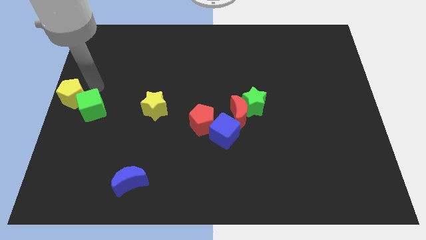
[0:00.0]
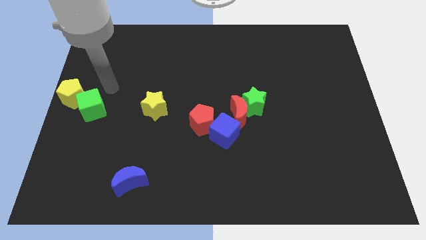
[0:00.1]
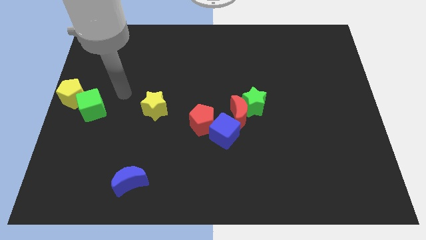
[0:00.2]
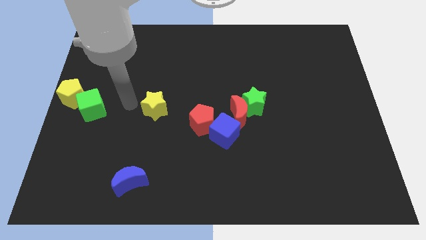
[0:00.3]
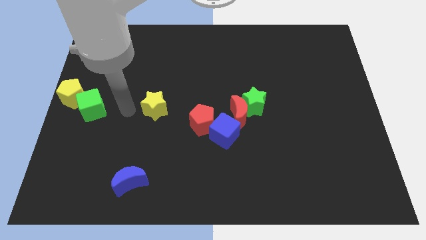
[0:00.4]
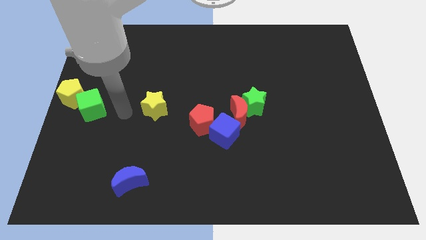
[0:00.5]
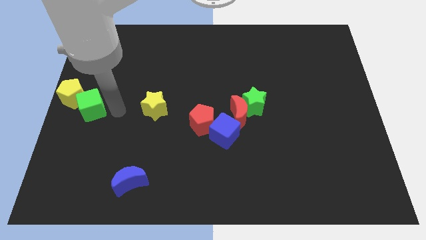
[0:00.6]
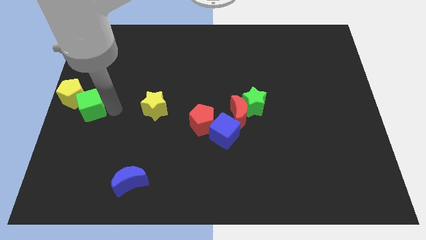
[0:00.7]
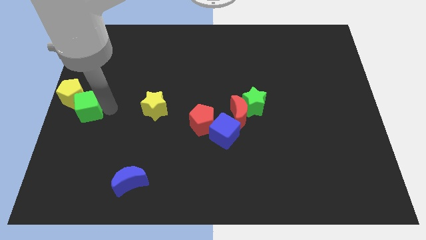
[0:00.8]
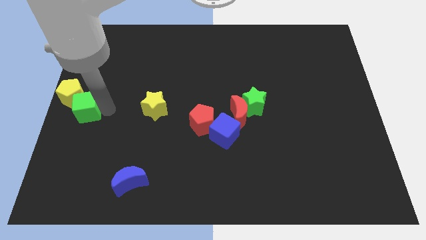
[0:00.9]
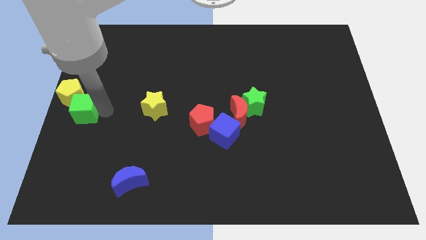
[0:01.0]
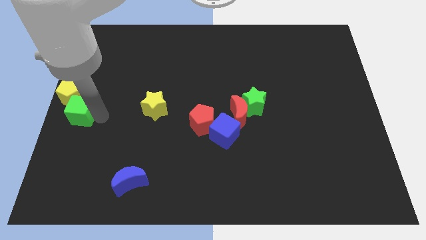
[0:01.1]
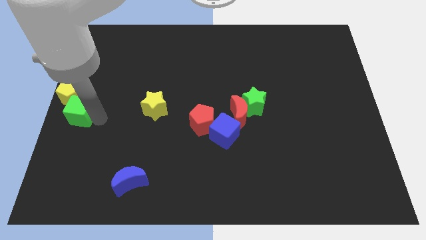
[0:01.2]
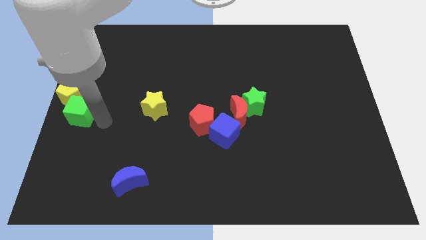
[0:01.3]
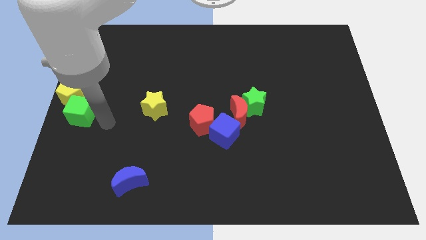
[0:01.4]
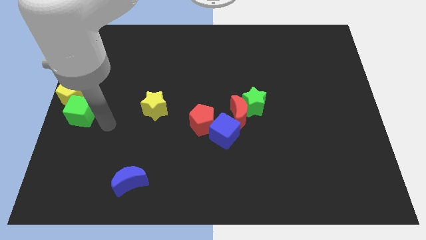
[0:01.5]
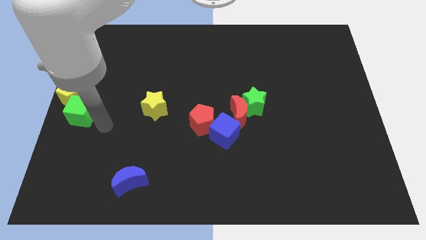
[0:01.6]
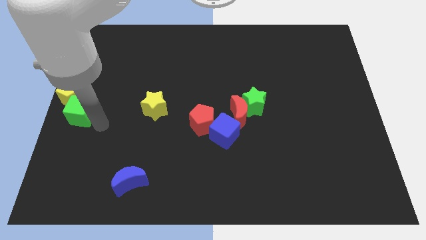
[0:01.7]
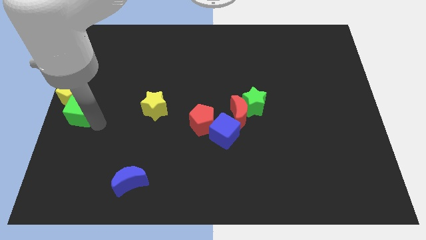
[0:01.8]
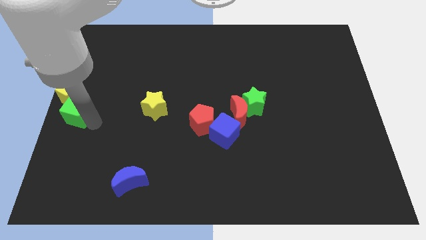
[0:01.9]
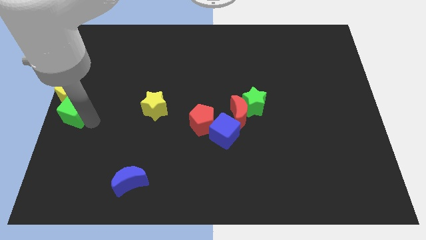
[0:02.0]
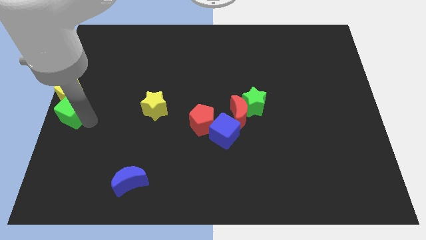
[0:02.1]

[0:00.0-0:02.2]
push the green cube at the left center of the board

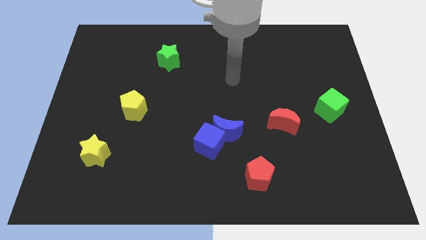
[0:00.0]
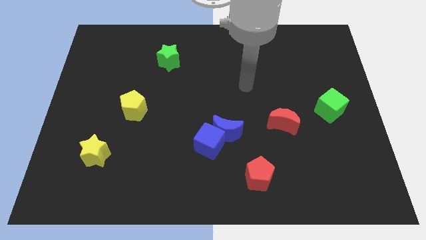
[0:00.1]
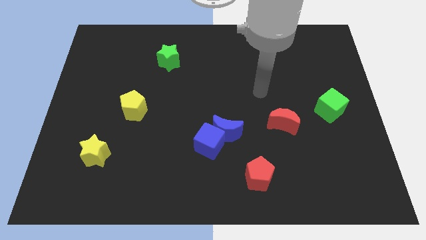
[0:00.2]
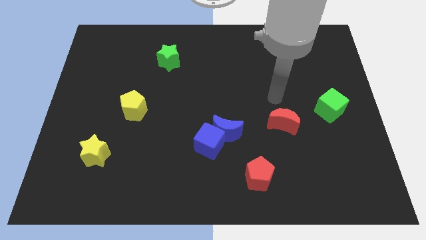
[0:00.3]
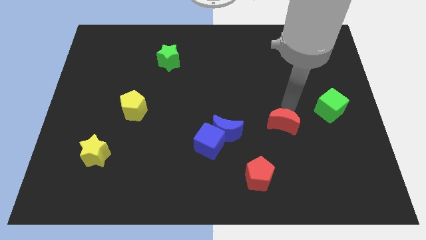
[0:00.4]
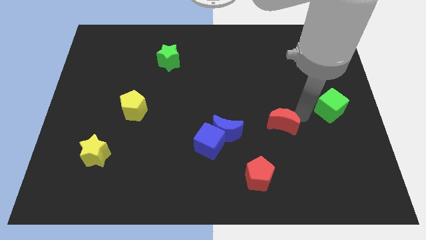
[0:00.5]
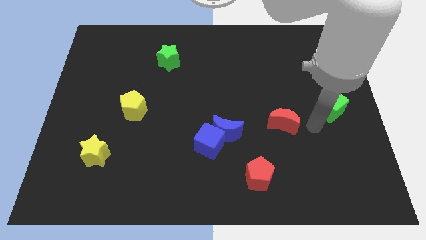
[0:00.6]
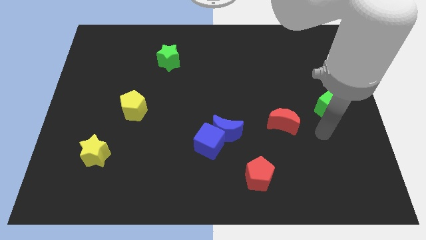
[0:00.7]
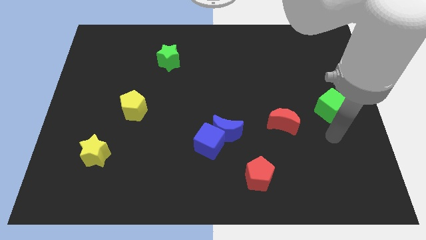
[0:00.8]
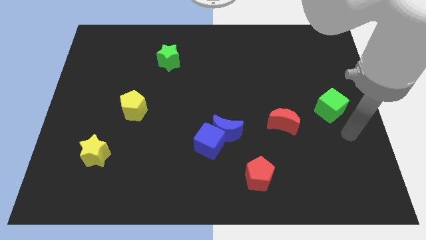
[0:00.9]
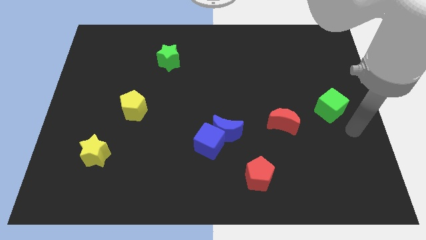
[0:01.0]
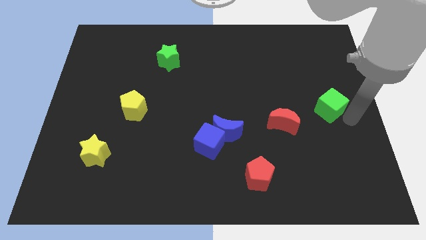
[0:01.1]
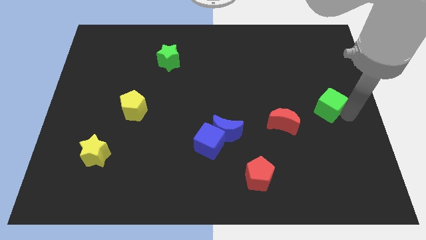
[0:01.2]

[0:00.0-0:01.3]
move arm to the green cube

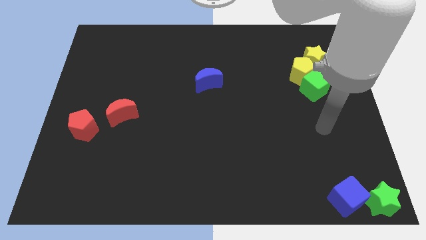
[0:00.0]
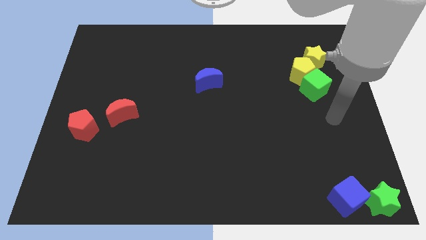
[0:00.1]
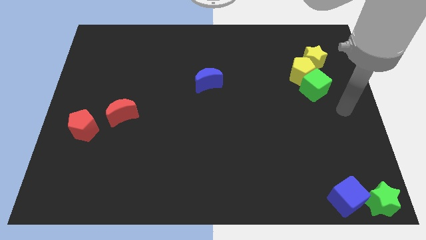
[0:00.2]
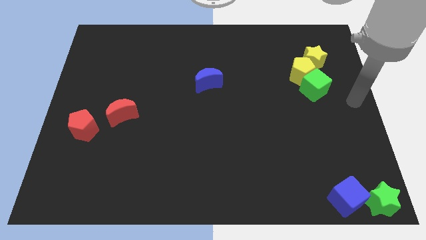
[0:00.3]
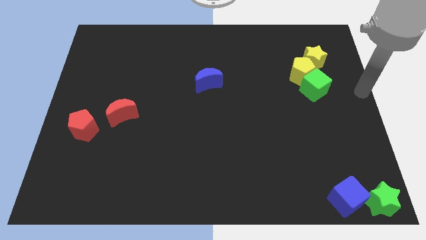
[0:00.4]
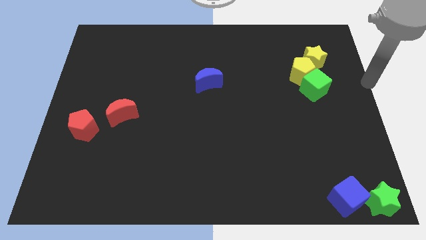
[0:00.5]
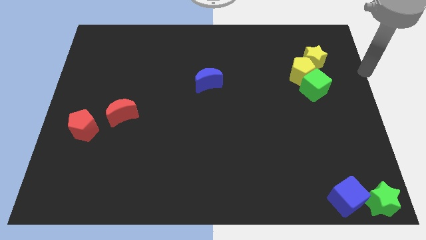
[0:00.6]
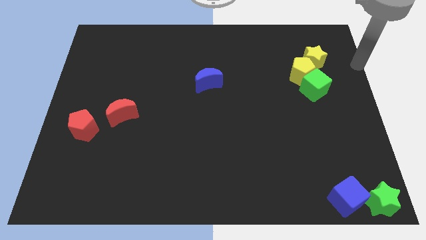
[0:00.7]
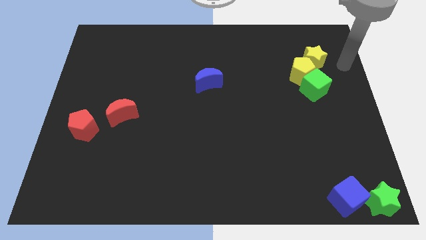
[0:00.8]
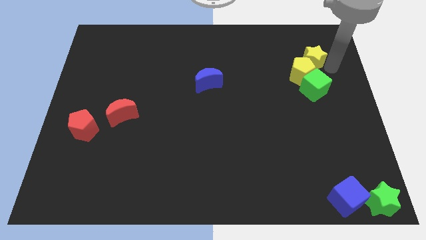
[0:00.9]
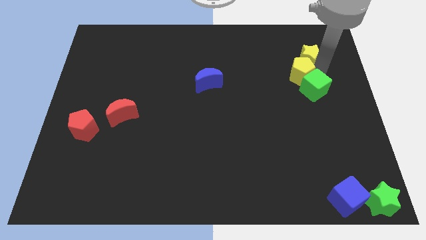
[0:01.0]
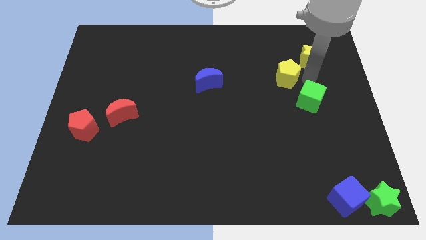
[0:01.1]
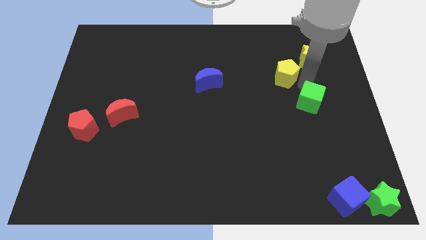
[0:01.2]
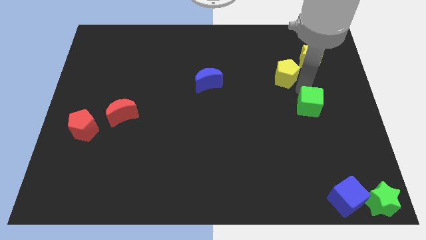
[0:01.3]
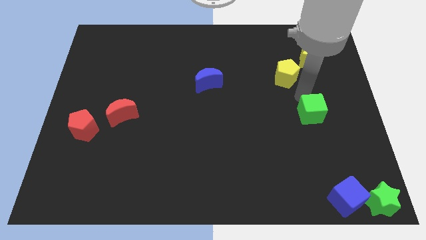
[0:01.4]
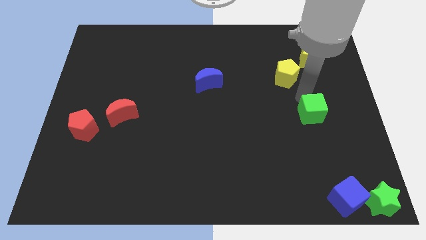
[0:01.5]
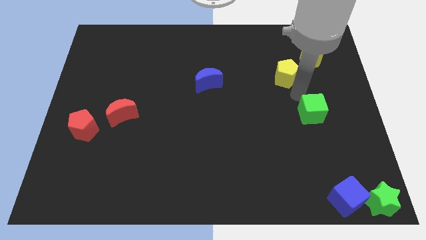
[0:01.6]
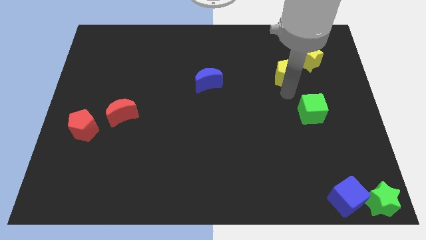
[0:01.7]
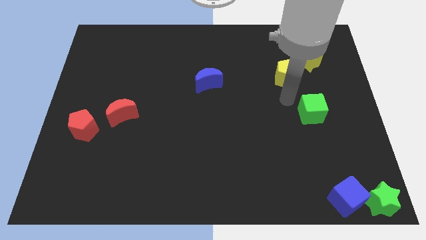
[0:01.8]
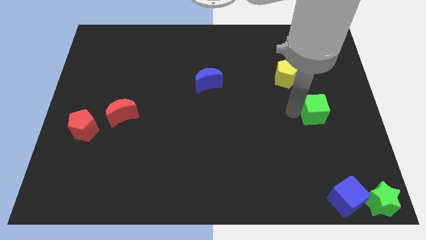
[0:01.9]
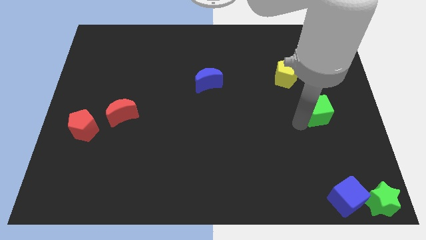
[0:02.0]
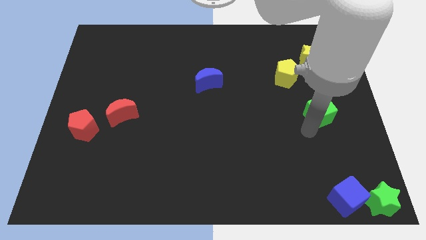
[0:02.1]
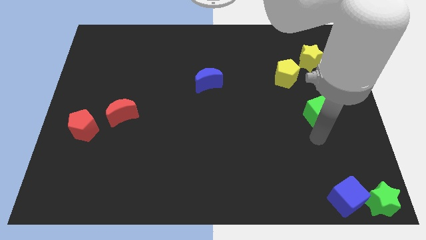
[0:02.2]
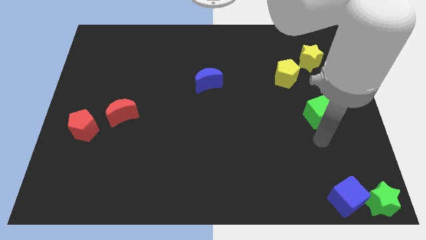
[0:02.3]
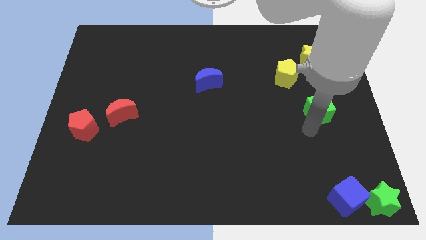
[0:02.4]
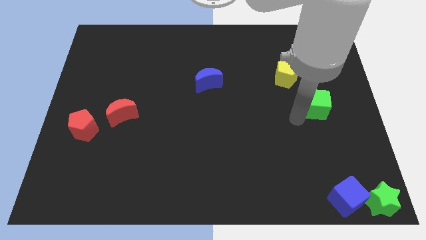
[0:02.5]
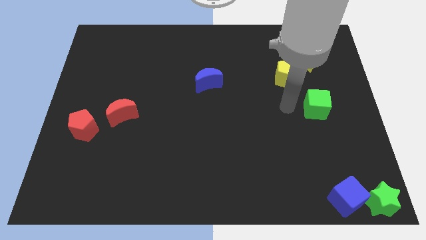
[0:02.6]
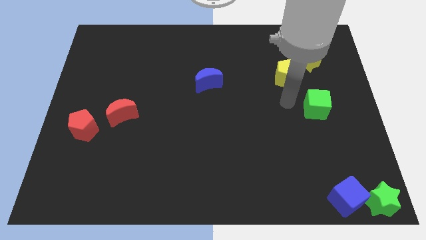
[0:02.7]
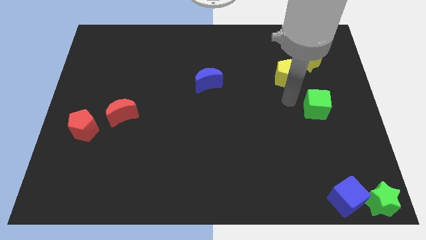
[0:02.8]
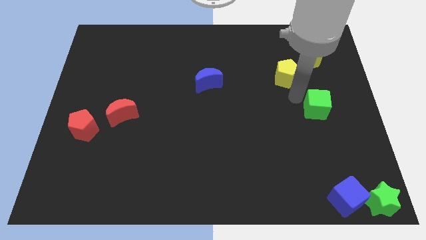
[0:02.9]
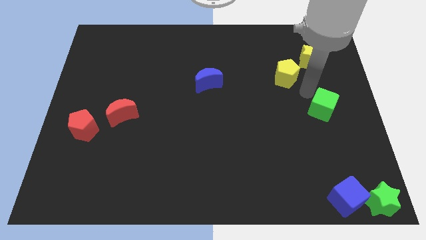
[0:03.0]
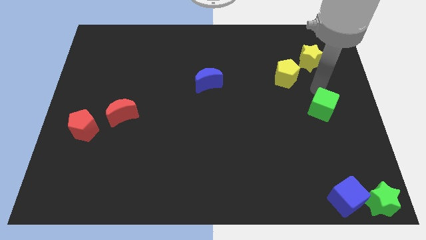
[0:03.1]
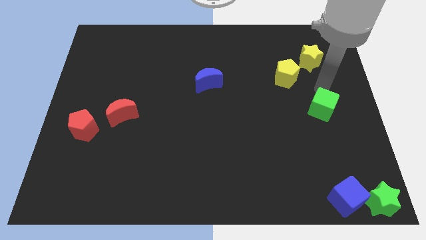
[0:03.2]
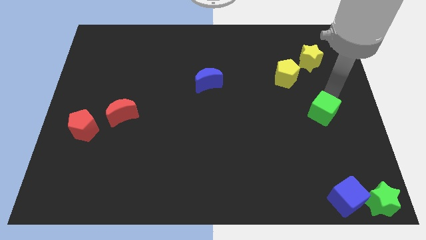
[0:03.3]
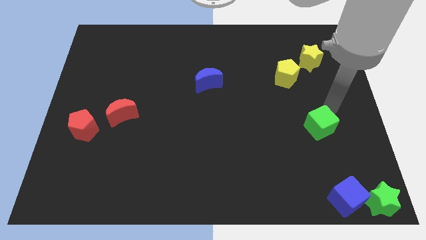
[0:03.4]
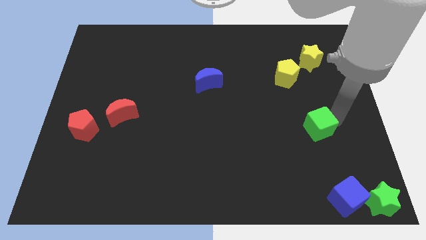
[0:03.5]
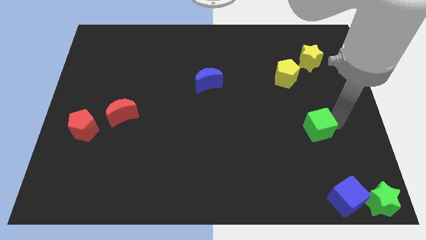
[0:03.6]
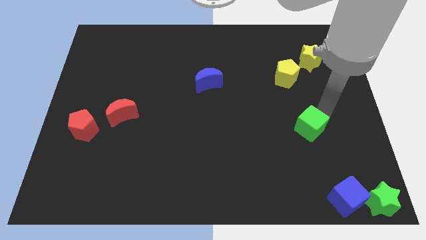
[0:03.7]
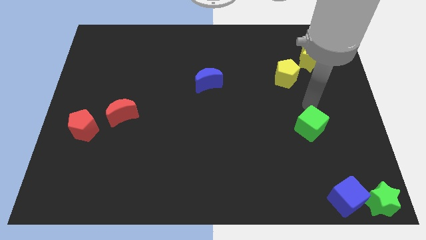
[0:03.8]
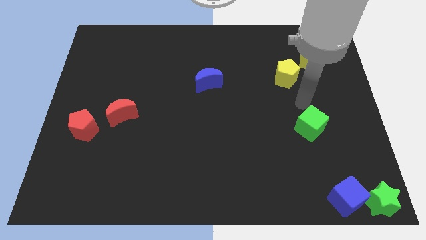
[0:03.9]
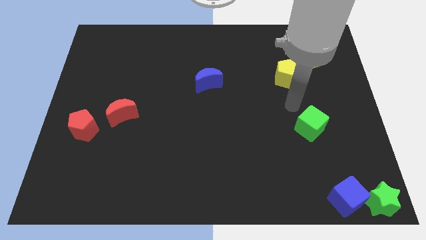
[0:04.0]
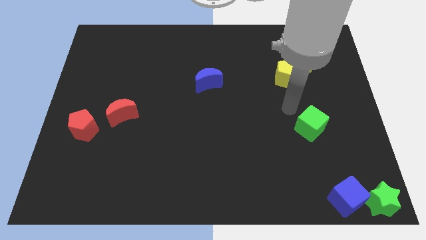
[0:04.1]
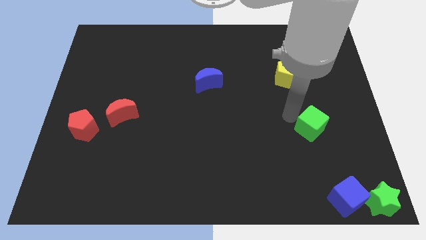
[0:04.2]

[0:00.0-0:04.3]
push the green cube away from the yellow pentagon

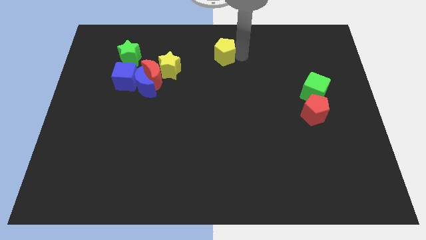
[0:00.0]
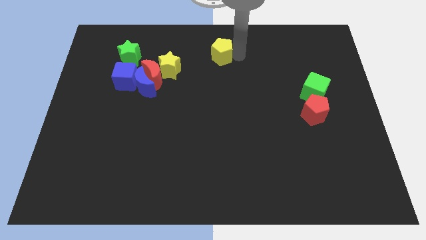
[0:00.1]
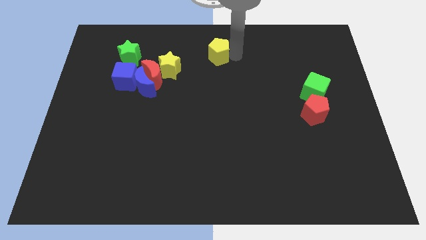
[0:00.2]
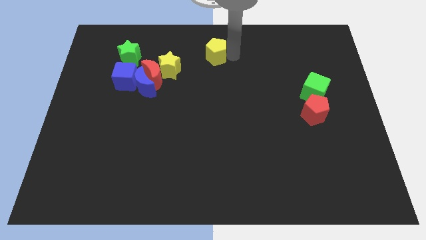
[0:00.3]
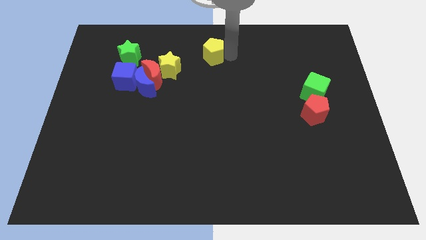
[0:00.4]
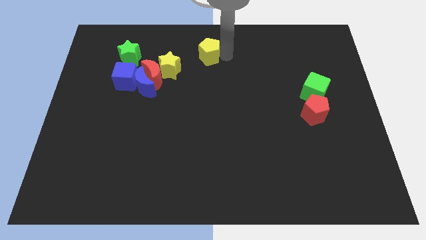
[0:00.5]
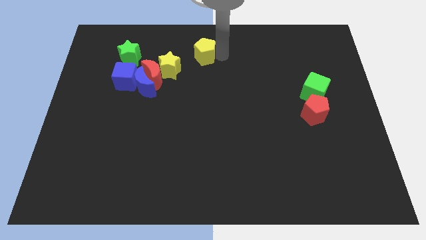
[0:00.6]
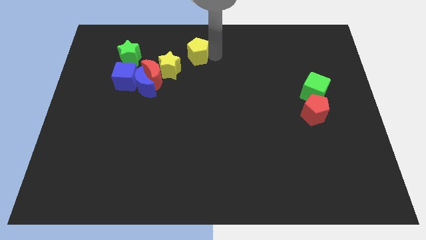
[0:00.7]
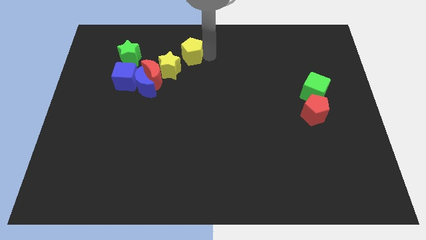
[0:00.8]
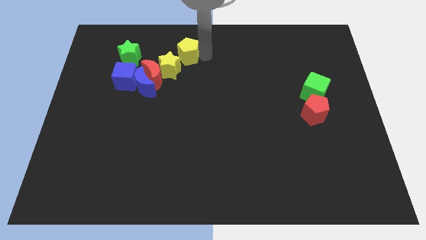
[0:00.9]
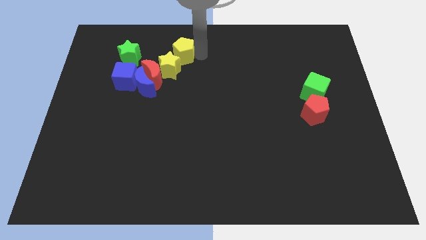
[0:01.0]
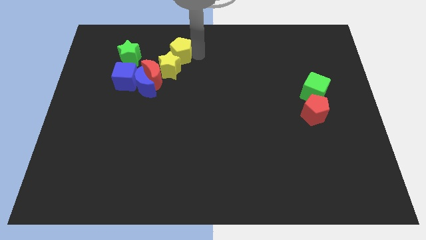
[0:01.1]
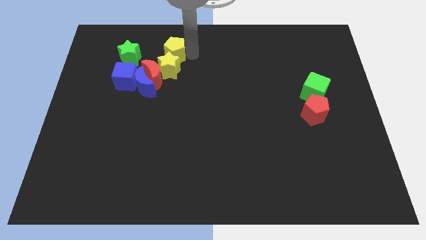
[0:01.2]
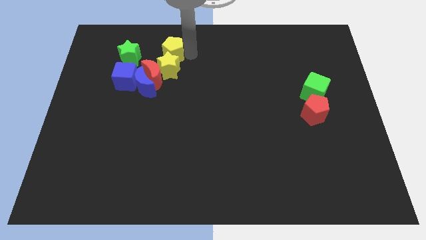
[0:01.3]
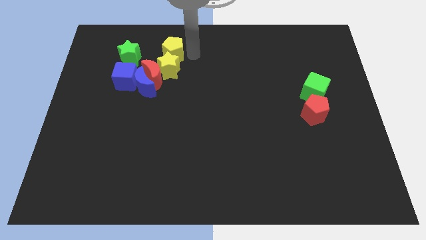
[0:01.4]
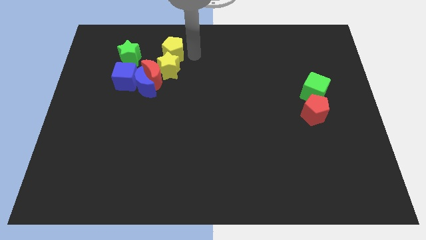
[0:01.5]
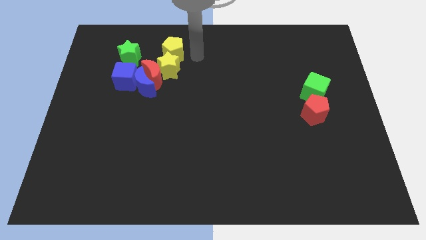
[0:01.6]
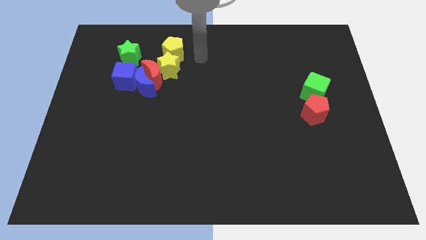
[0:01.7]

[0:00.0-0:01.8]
place the yellow pentagon vertically above the yellow star
